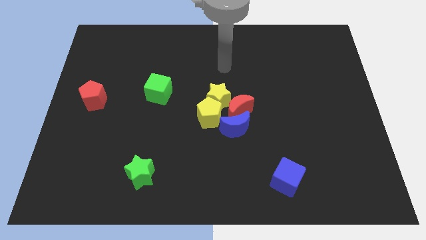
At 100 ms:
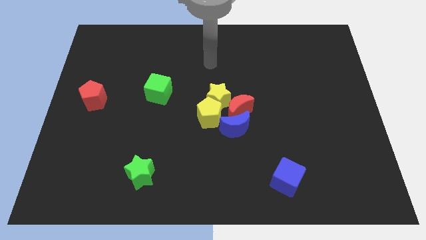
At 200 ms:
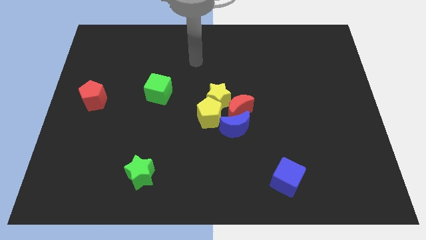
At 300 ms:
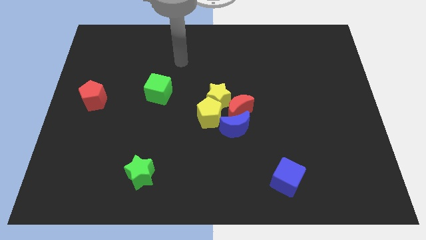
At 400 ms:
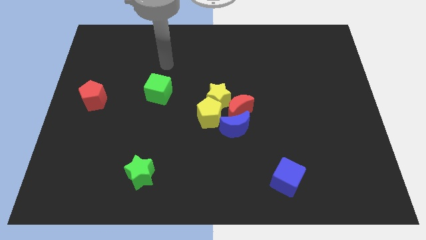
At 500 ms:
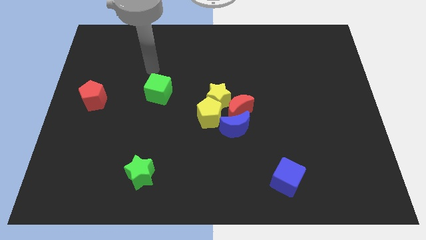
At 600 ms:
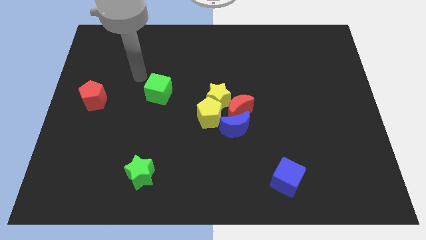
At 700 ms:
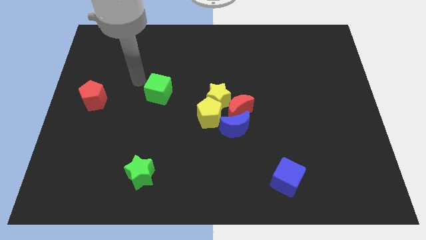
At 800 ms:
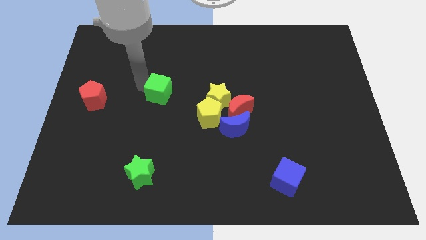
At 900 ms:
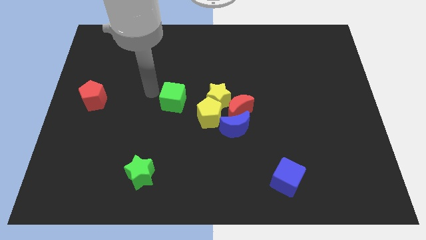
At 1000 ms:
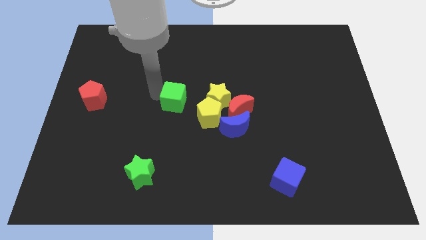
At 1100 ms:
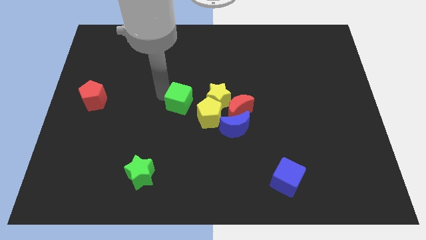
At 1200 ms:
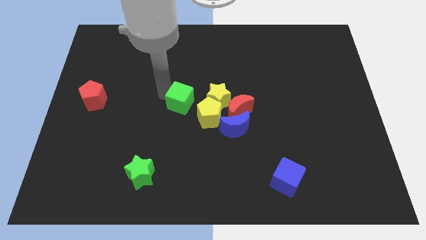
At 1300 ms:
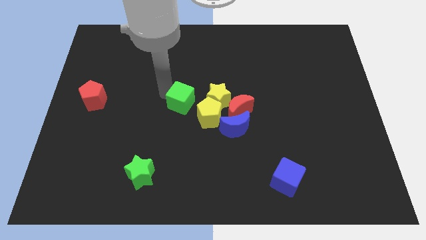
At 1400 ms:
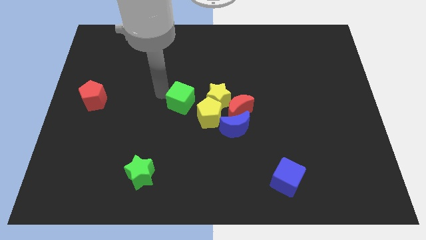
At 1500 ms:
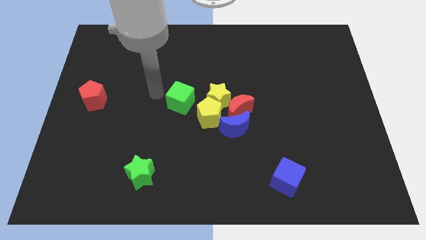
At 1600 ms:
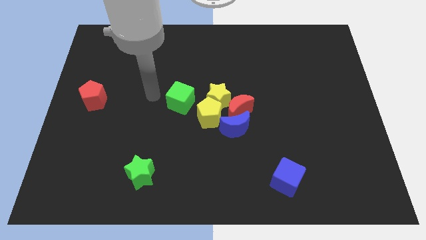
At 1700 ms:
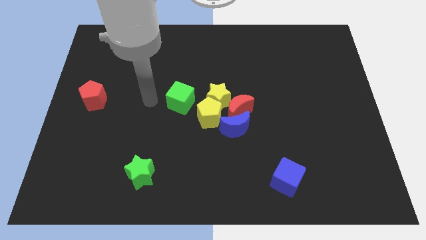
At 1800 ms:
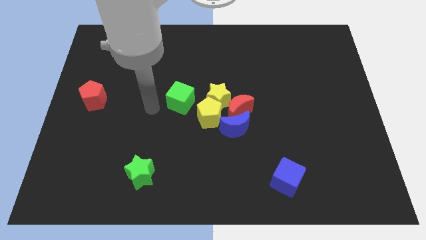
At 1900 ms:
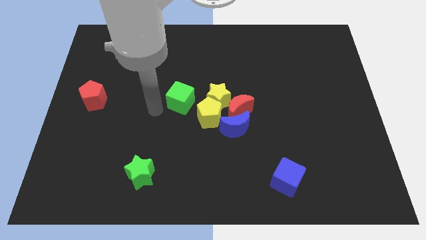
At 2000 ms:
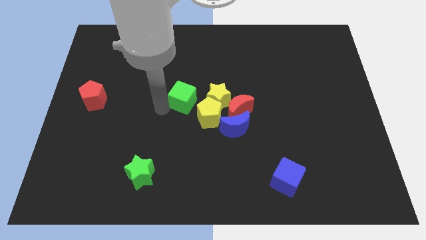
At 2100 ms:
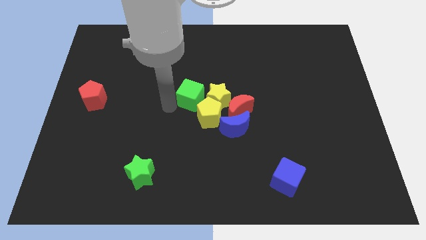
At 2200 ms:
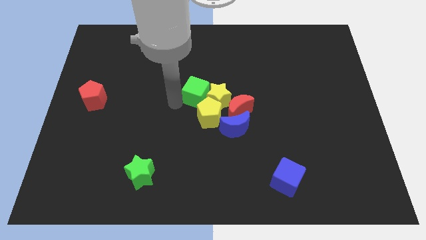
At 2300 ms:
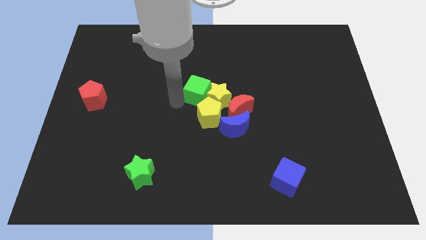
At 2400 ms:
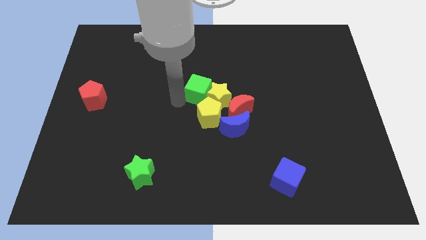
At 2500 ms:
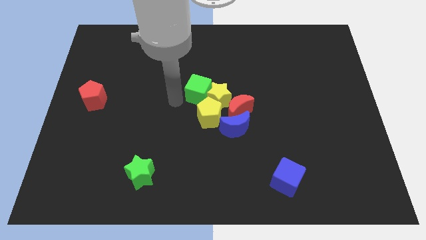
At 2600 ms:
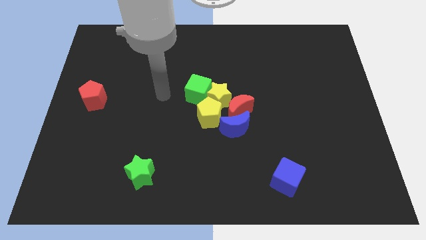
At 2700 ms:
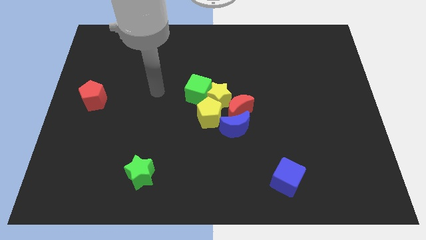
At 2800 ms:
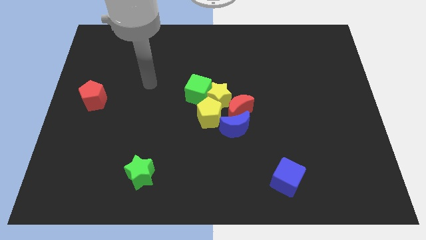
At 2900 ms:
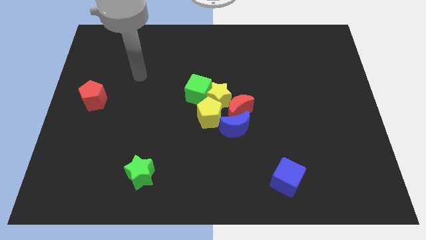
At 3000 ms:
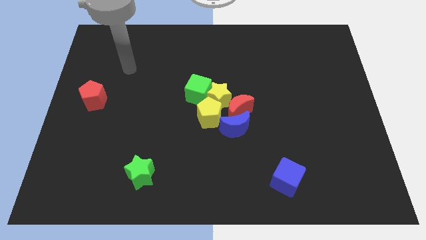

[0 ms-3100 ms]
push the green cube into yellow star

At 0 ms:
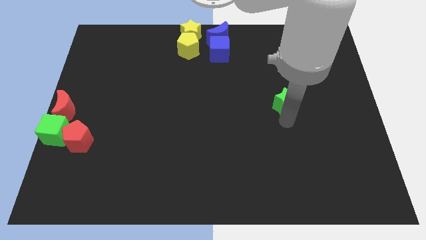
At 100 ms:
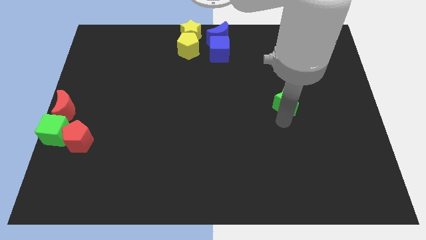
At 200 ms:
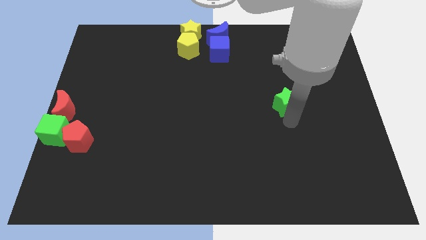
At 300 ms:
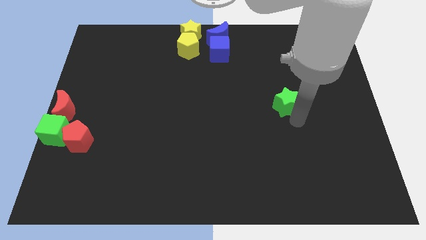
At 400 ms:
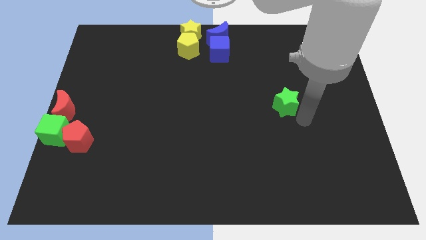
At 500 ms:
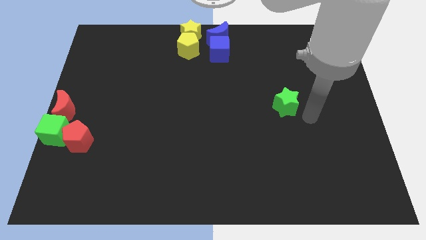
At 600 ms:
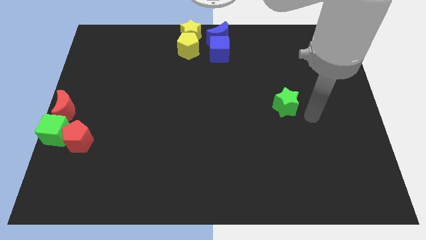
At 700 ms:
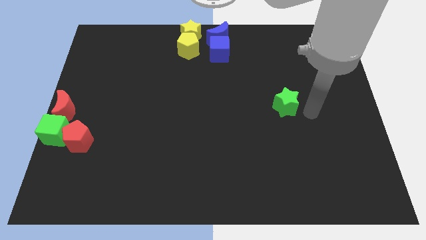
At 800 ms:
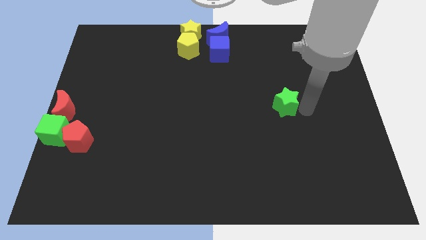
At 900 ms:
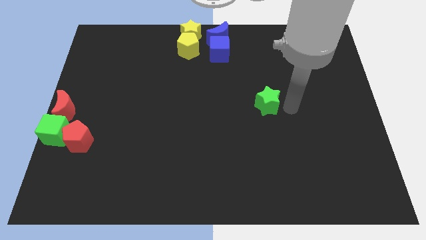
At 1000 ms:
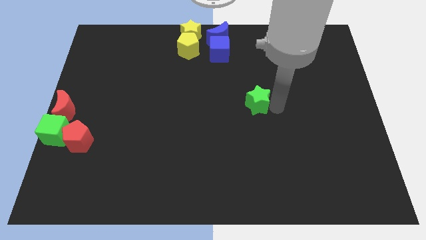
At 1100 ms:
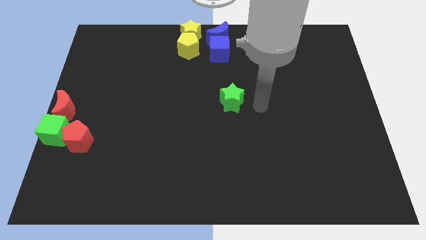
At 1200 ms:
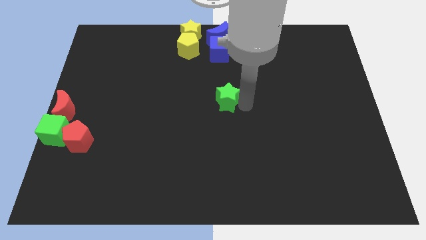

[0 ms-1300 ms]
move the green star to the center of the board

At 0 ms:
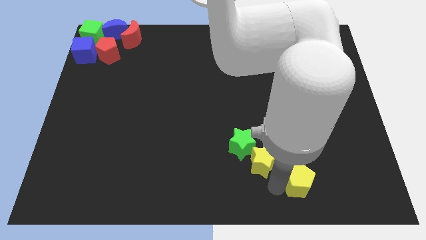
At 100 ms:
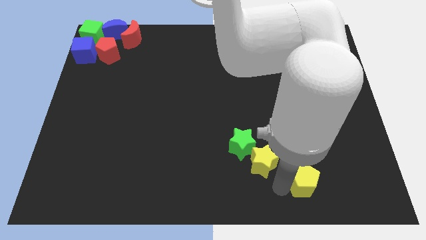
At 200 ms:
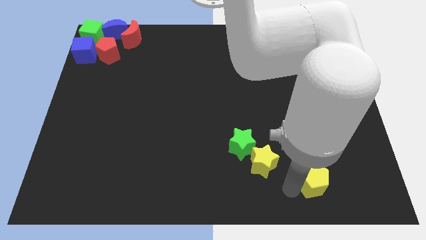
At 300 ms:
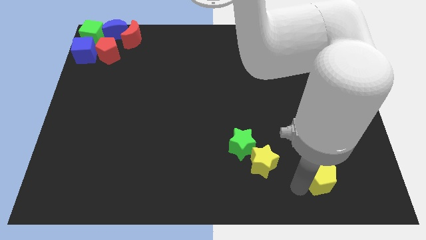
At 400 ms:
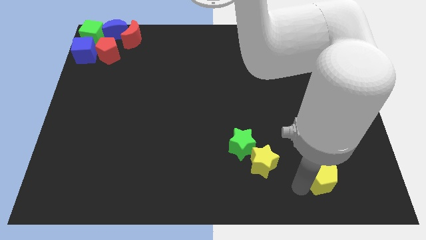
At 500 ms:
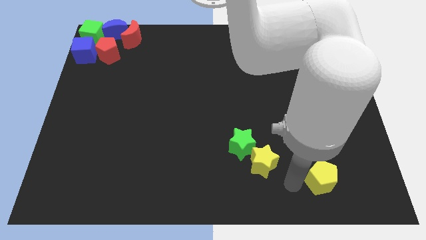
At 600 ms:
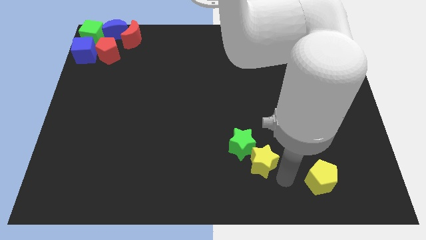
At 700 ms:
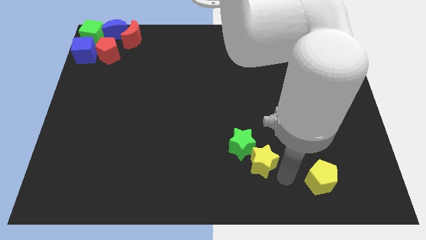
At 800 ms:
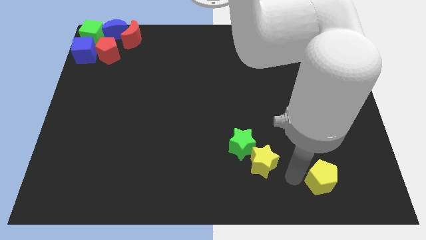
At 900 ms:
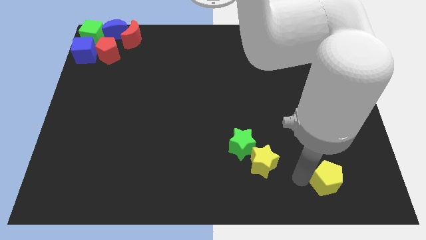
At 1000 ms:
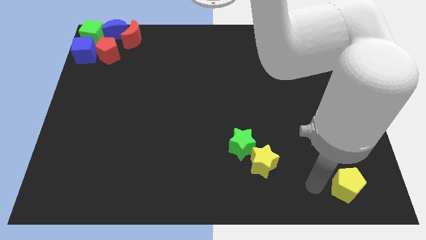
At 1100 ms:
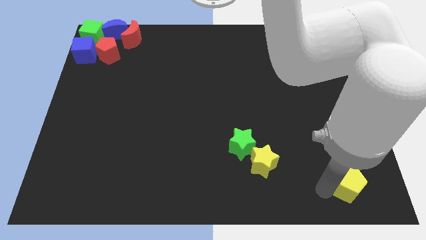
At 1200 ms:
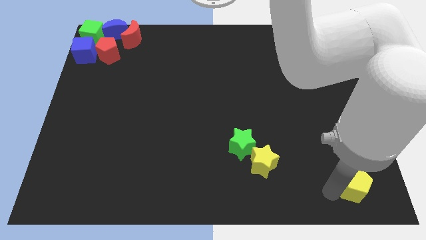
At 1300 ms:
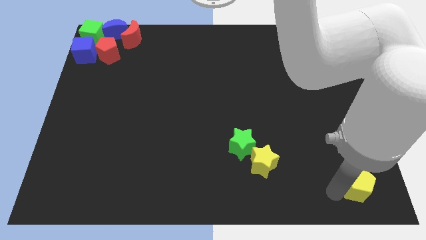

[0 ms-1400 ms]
slide the yellow pentagon slightly to the right

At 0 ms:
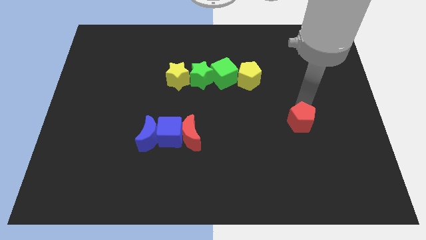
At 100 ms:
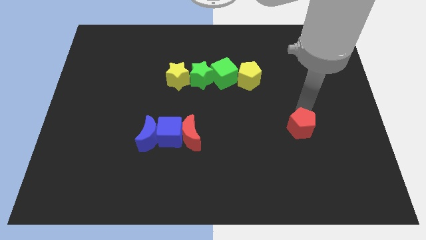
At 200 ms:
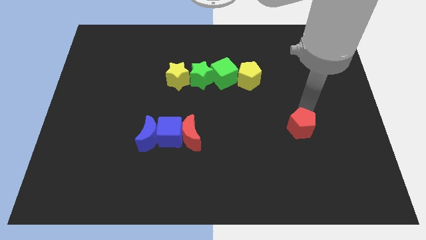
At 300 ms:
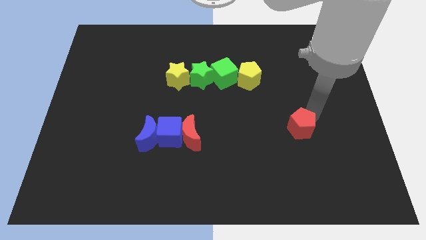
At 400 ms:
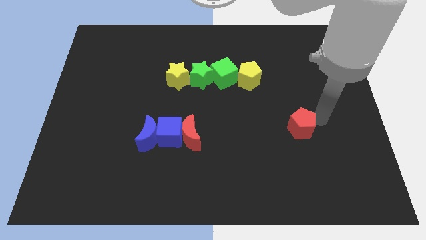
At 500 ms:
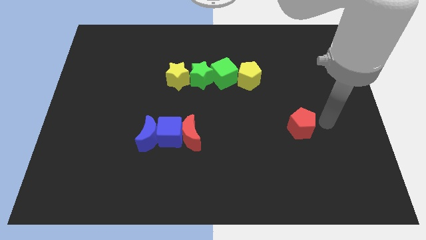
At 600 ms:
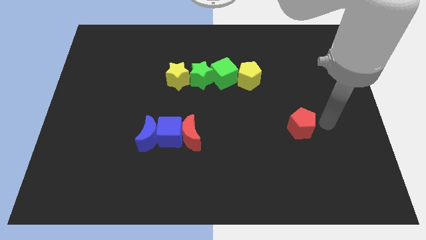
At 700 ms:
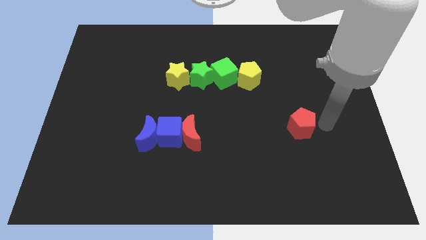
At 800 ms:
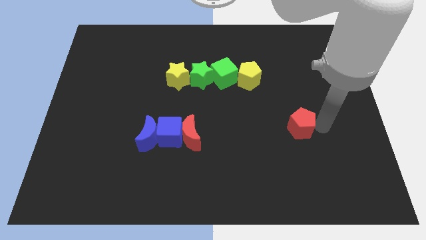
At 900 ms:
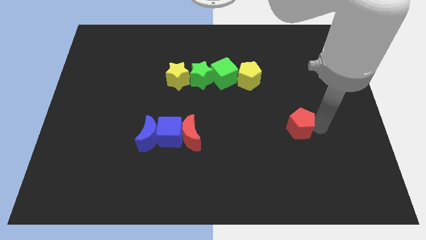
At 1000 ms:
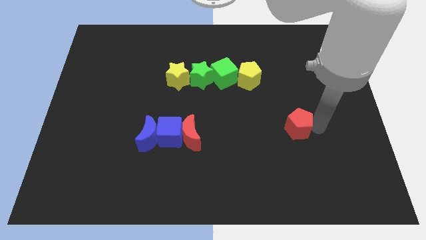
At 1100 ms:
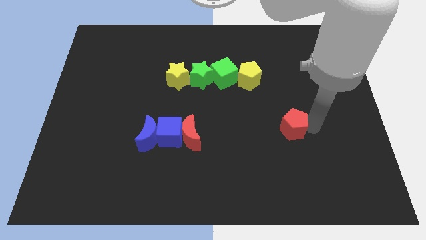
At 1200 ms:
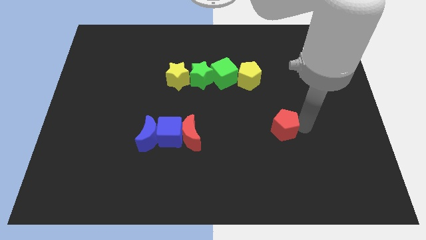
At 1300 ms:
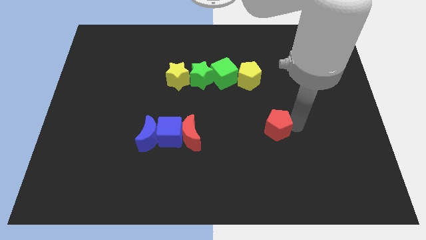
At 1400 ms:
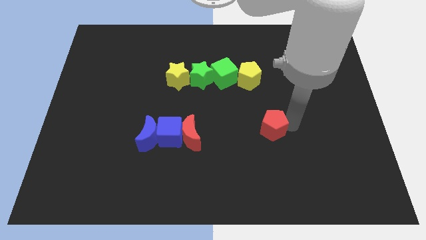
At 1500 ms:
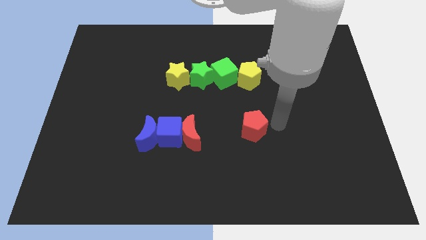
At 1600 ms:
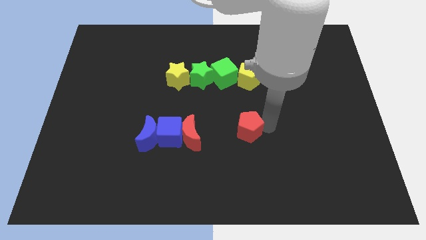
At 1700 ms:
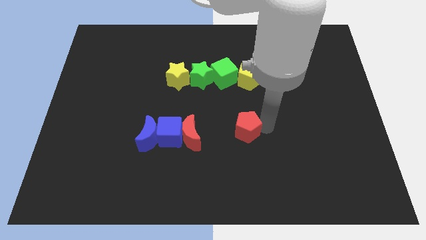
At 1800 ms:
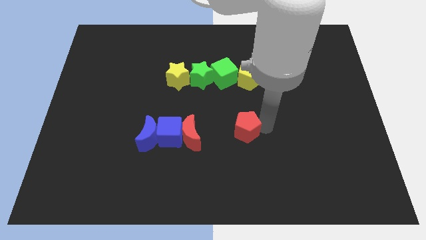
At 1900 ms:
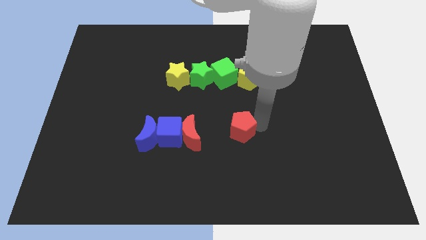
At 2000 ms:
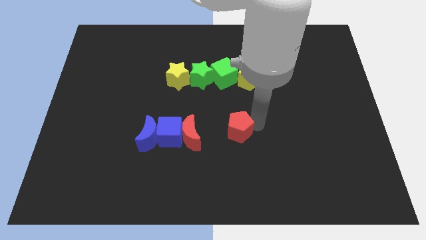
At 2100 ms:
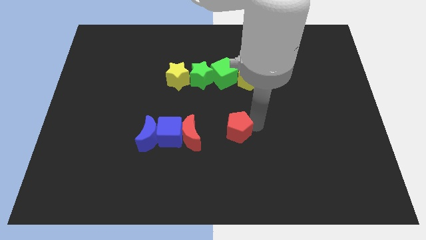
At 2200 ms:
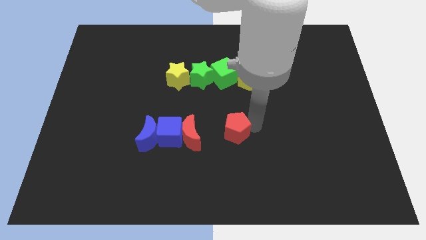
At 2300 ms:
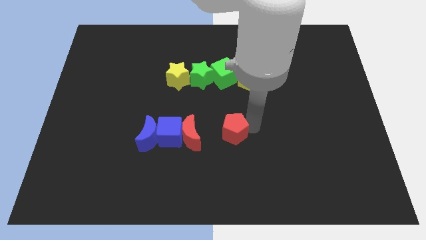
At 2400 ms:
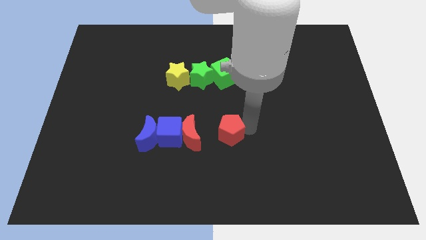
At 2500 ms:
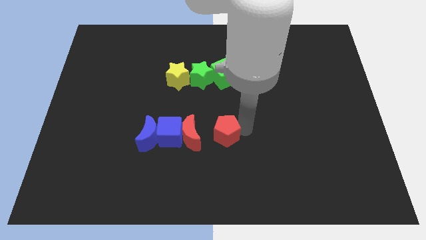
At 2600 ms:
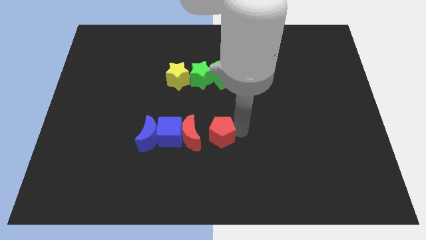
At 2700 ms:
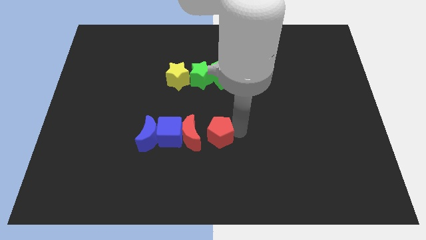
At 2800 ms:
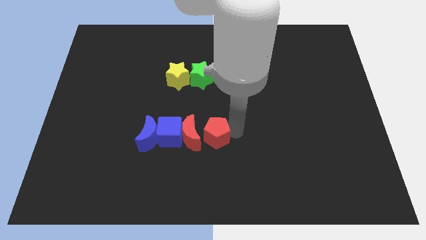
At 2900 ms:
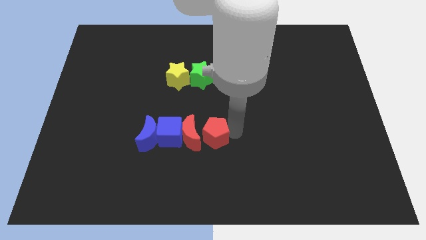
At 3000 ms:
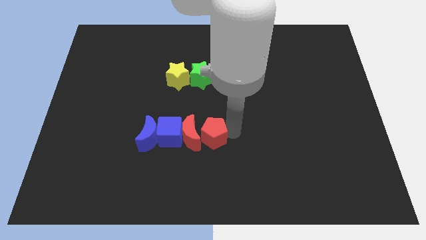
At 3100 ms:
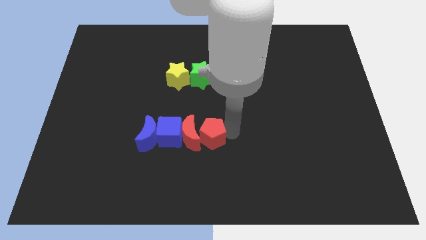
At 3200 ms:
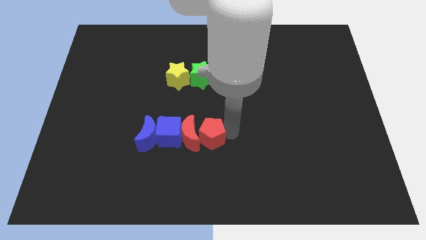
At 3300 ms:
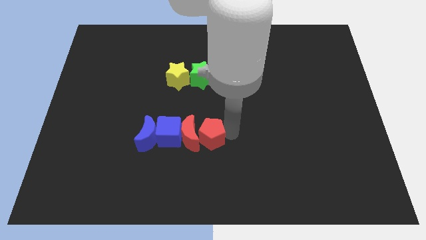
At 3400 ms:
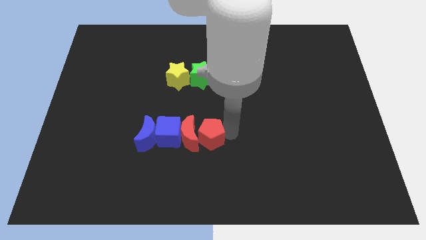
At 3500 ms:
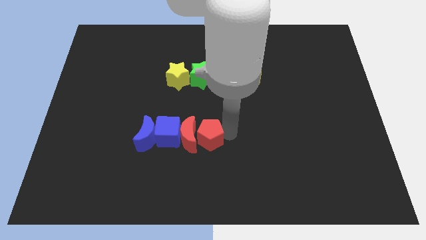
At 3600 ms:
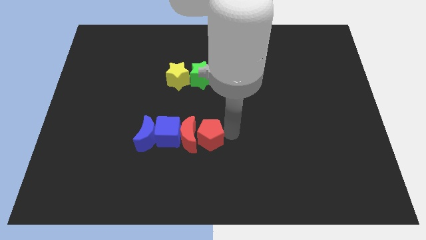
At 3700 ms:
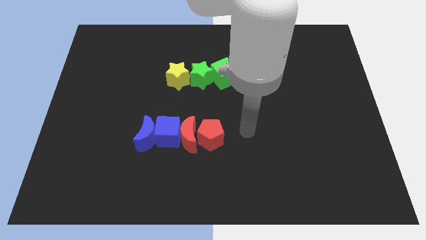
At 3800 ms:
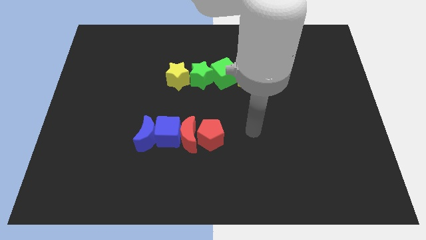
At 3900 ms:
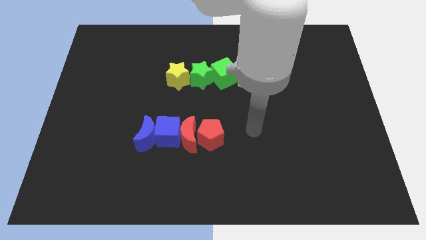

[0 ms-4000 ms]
push the red pentagon into the right side of the red moon
